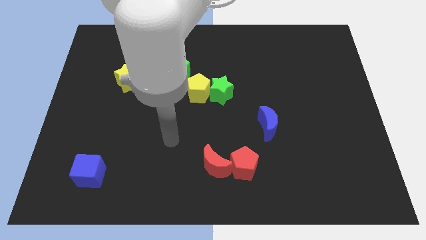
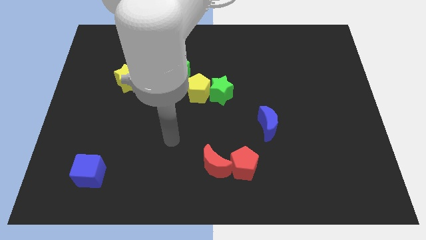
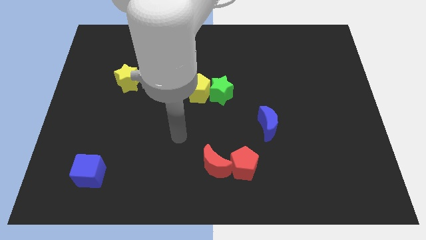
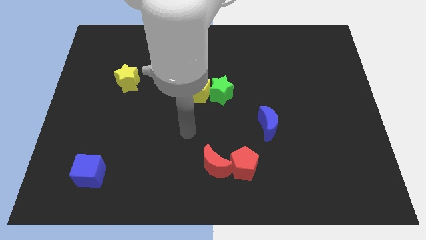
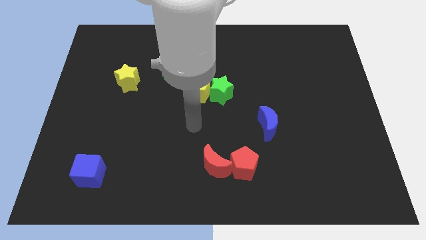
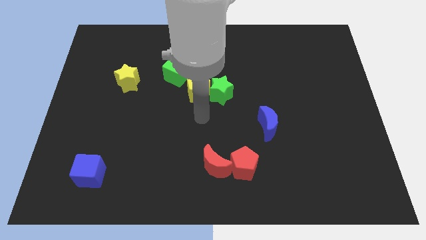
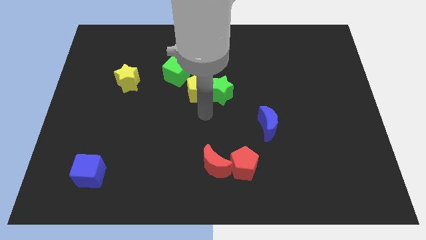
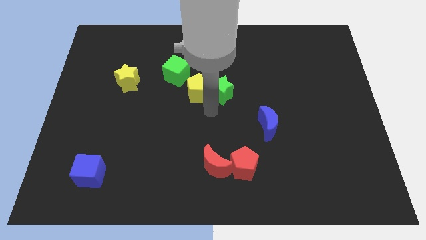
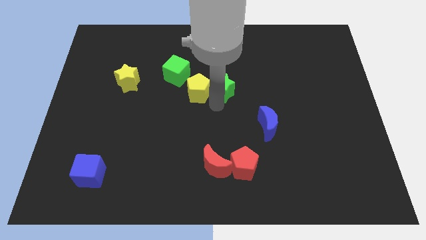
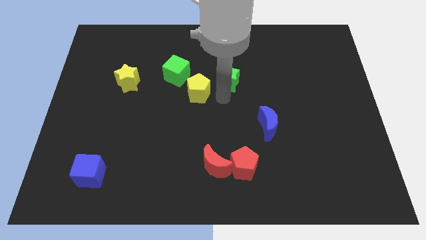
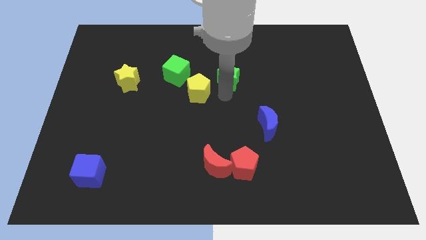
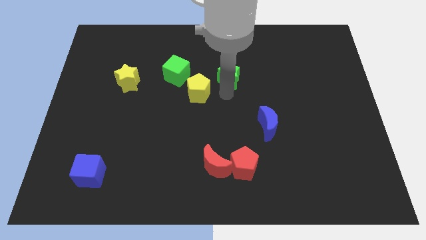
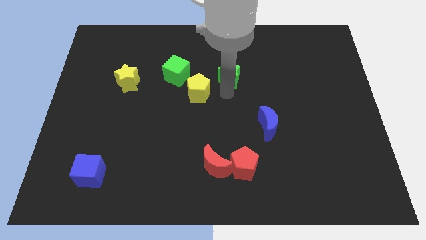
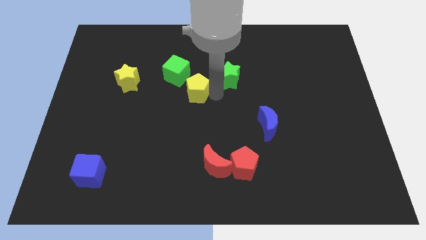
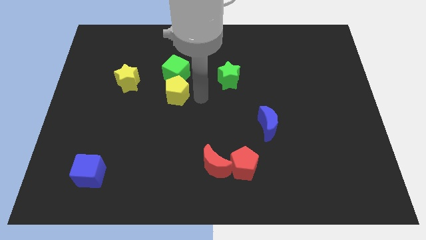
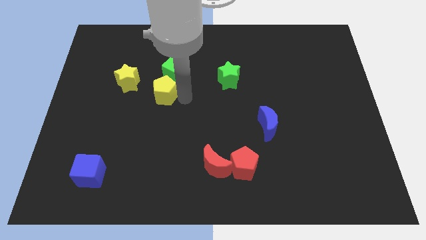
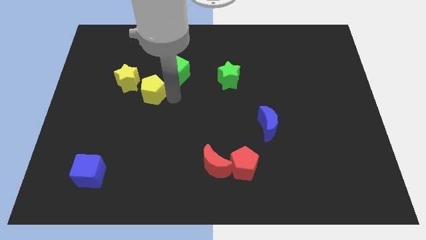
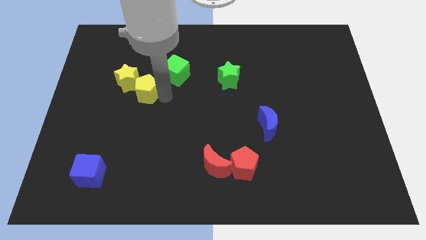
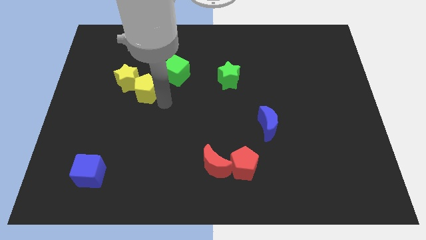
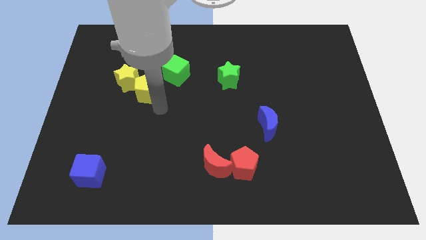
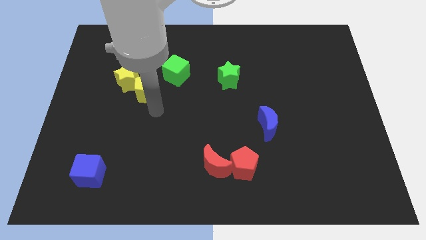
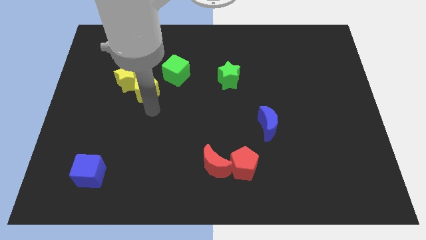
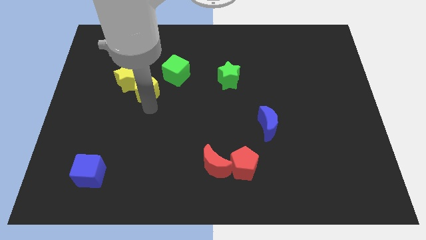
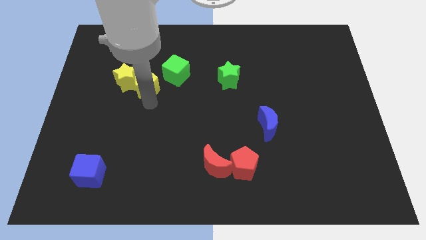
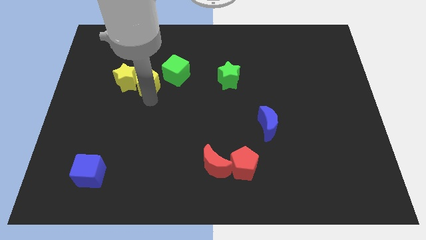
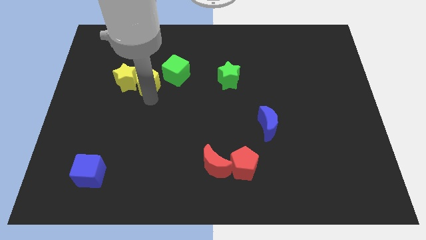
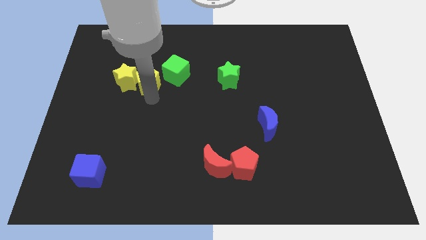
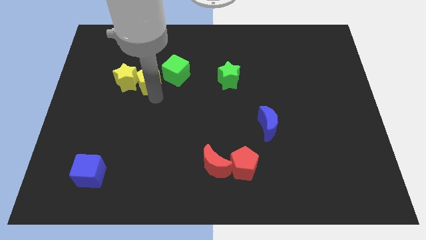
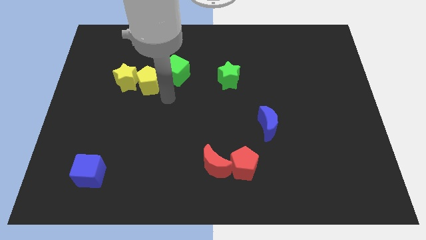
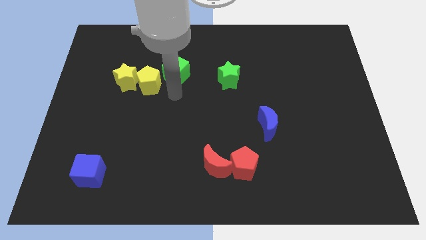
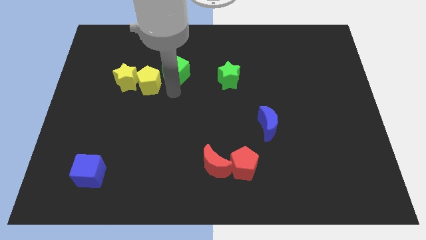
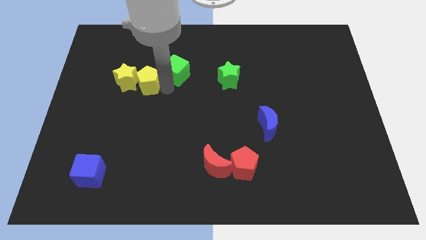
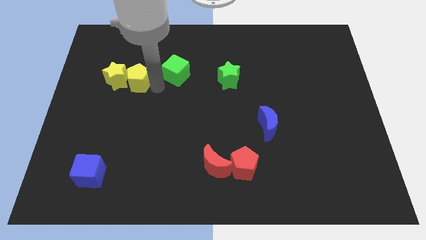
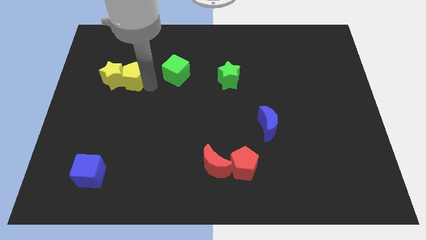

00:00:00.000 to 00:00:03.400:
move the green star to the right of the green cube

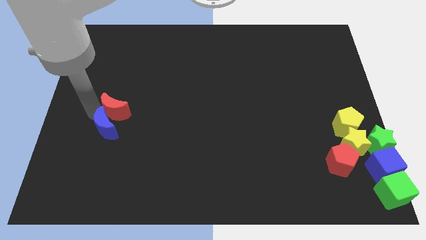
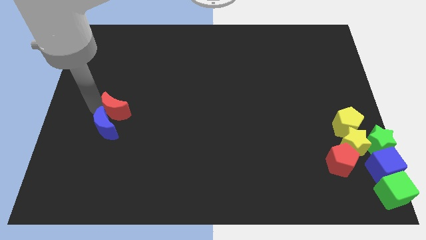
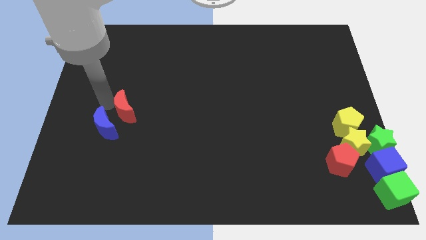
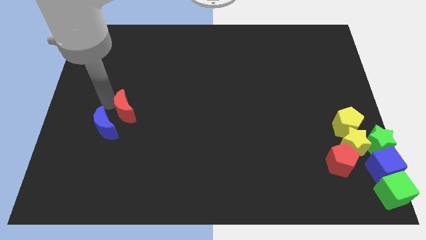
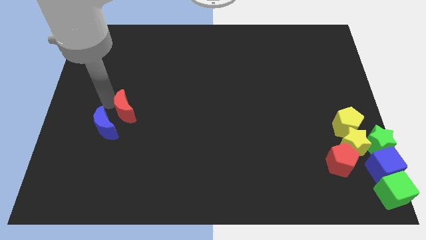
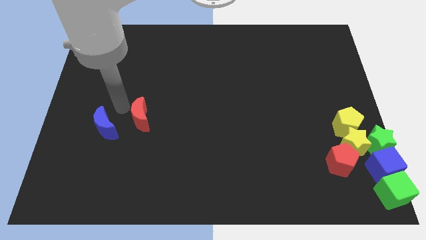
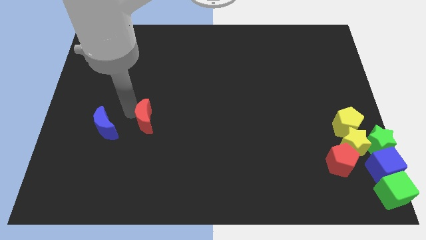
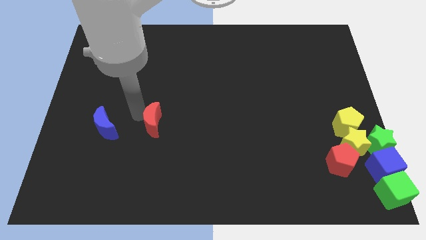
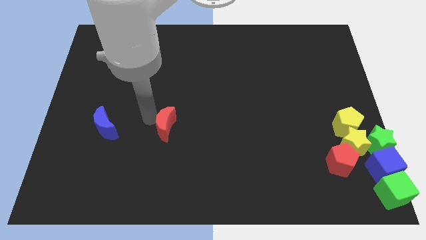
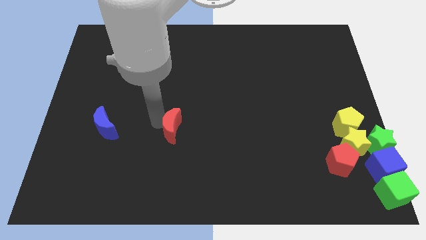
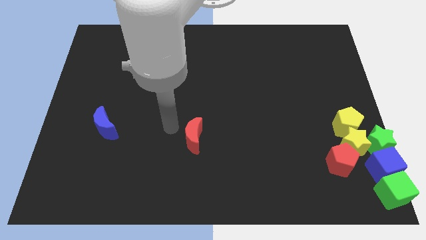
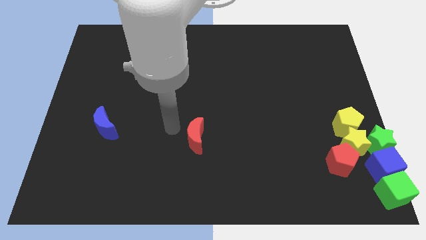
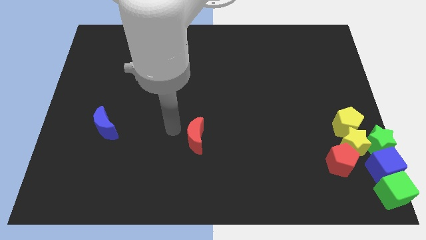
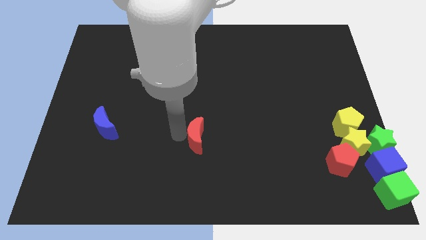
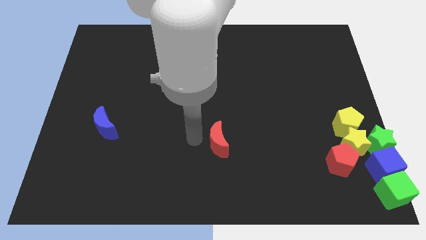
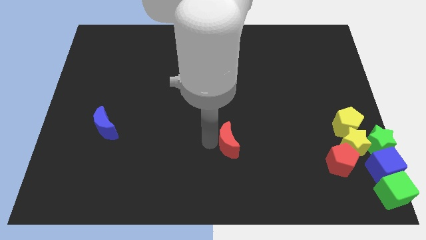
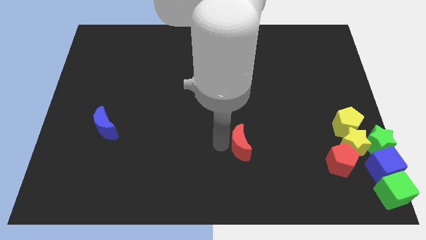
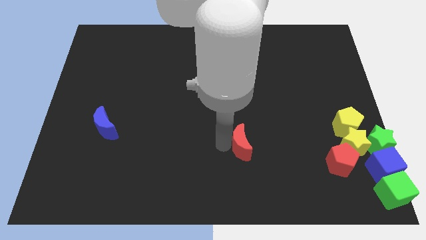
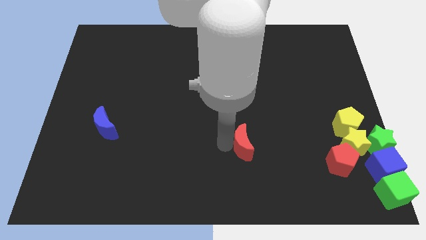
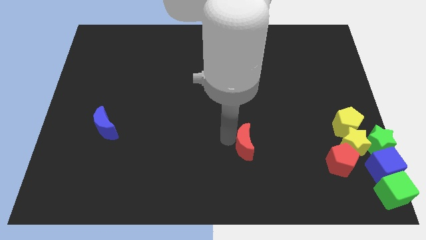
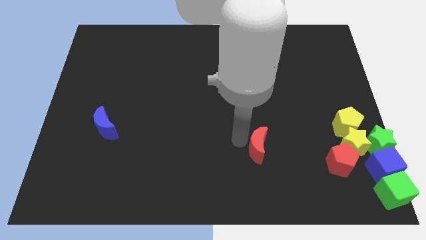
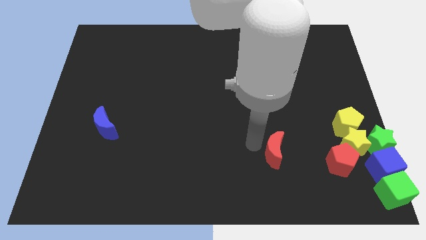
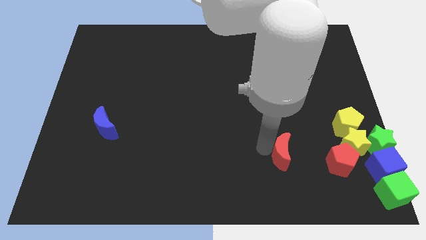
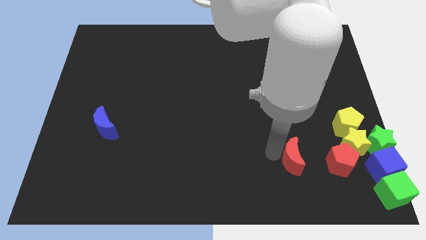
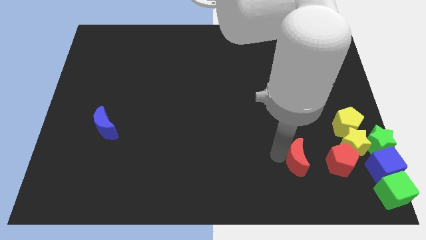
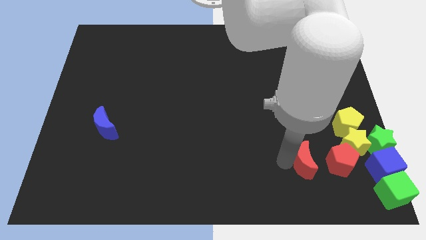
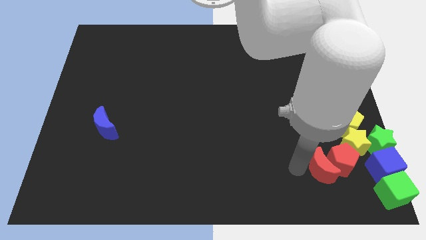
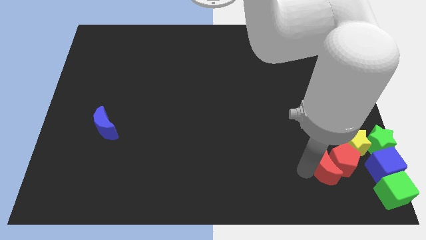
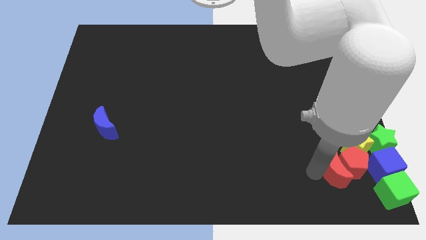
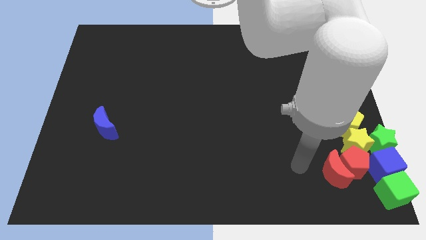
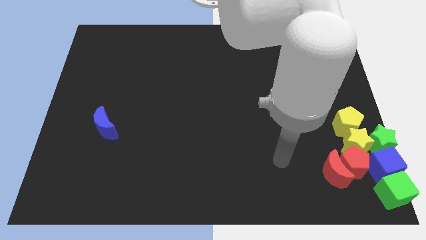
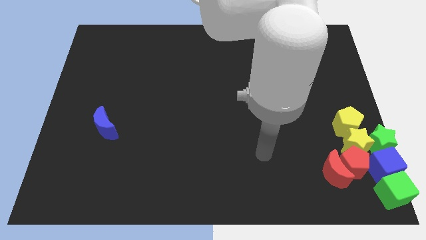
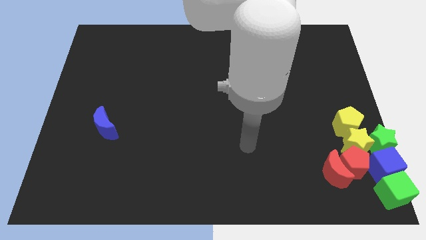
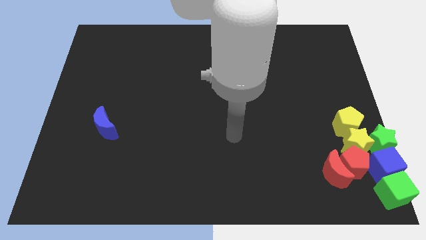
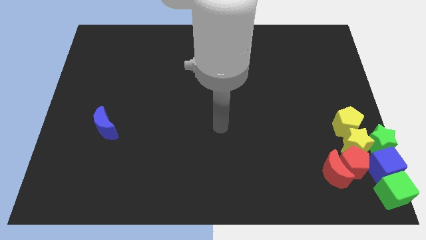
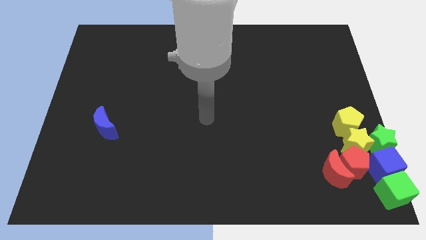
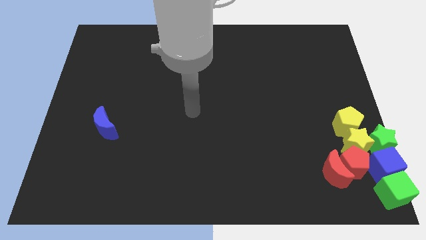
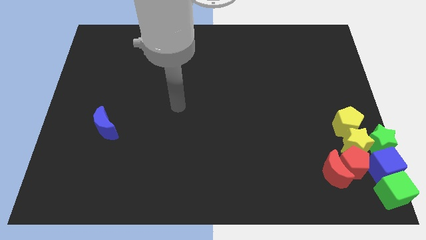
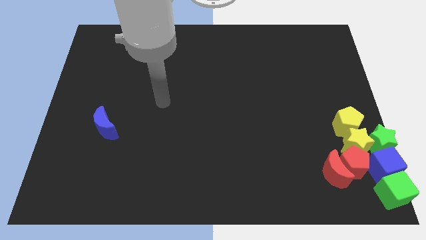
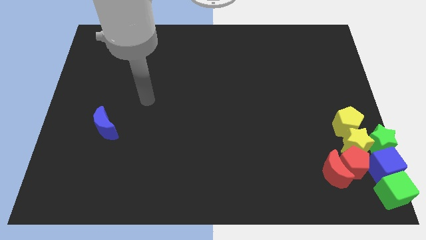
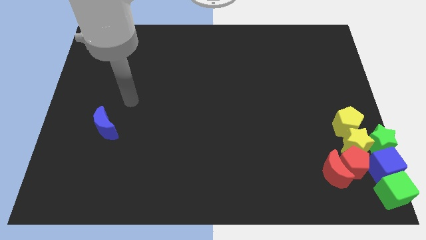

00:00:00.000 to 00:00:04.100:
move the red crescent to the left of the red pentagon

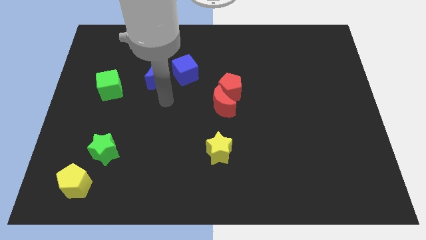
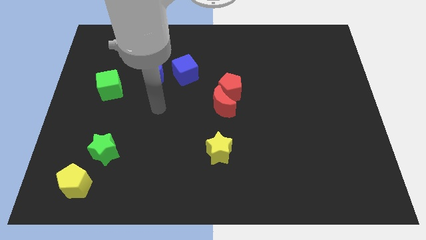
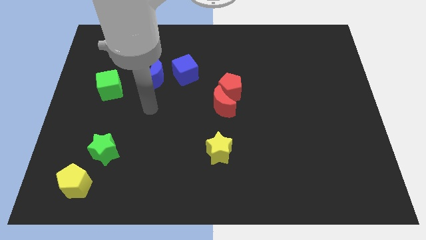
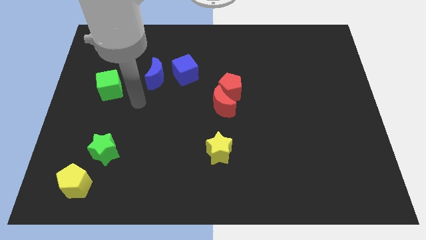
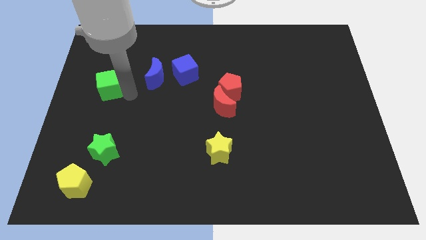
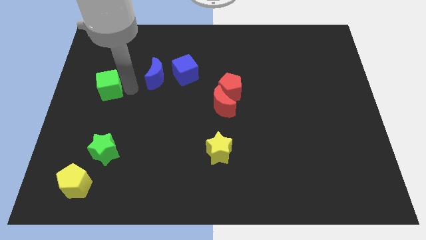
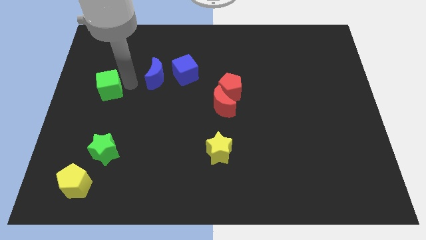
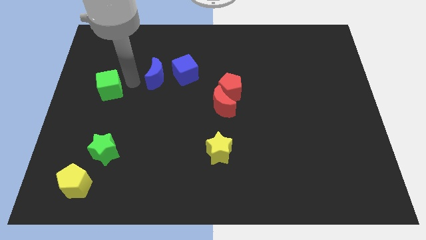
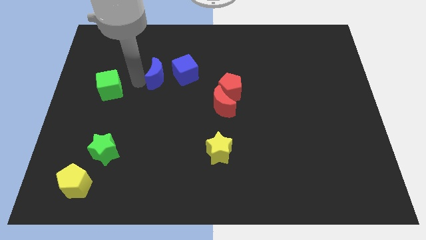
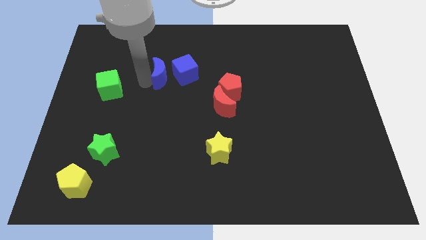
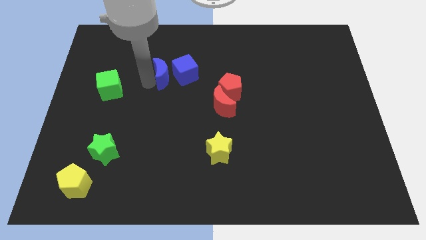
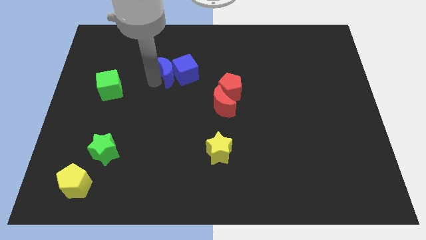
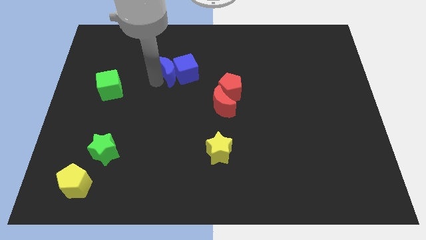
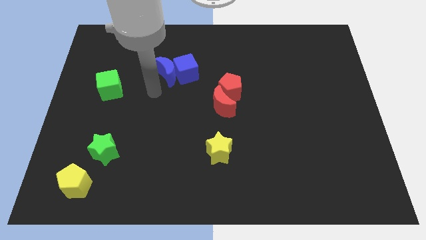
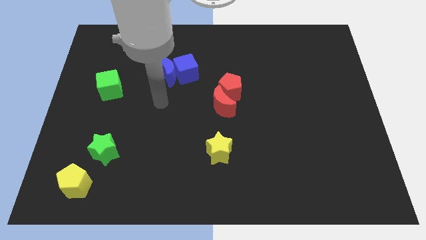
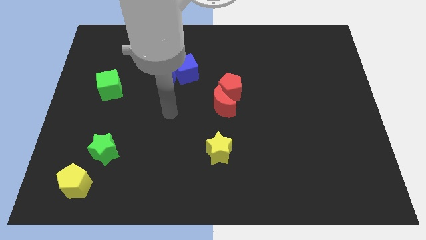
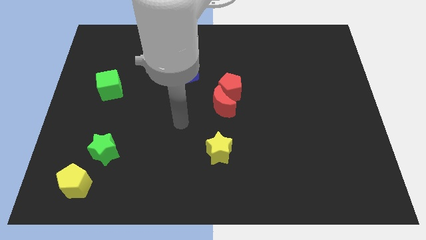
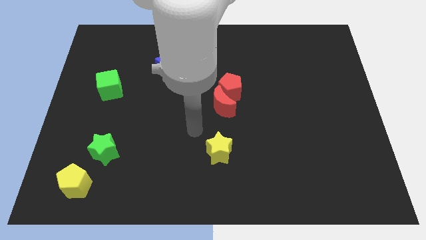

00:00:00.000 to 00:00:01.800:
touch the blue cube with blue crescent
